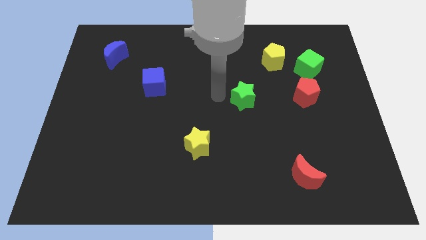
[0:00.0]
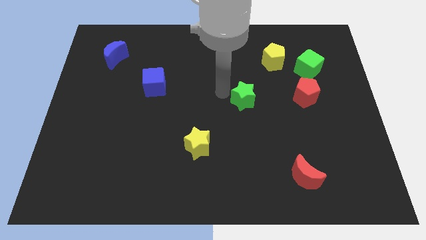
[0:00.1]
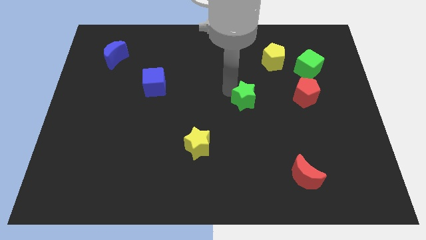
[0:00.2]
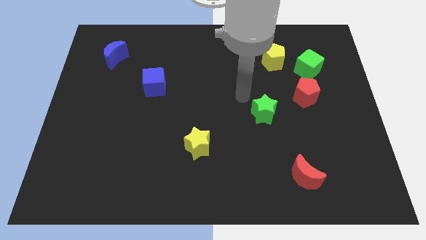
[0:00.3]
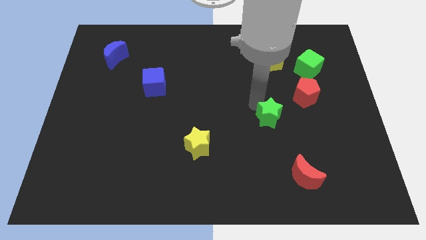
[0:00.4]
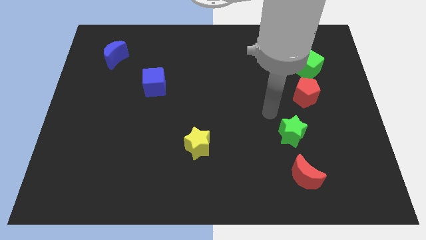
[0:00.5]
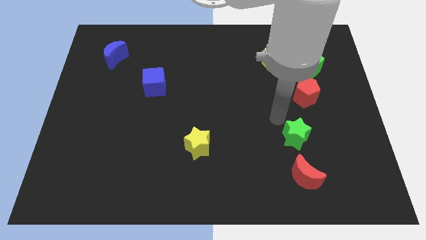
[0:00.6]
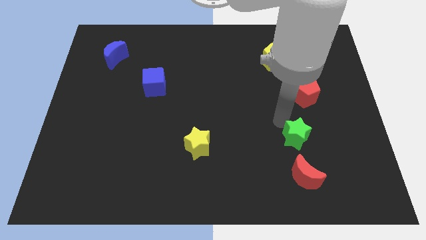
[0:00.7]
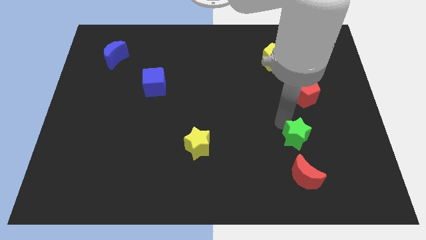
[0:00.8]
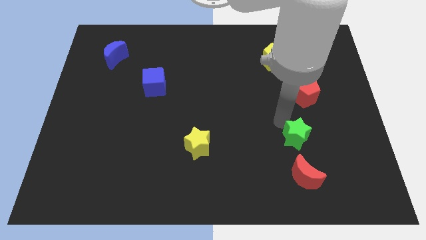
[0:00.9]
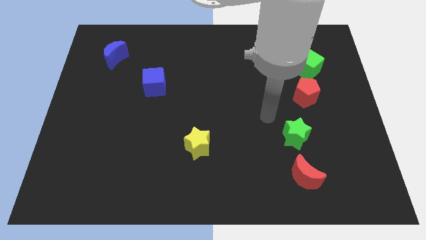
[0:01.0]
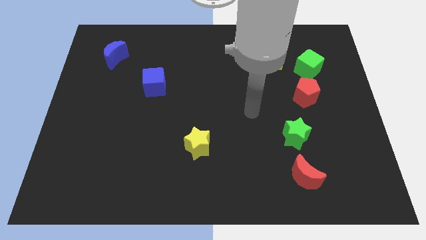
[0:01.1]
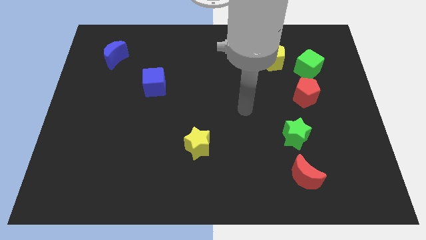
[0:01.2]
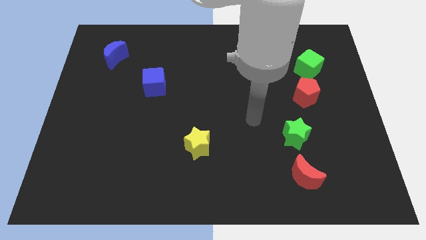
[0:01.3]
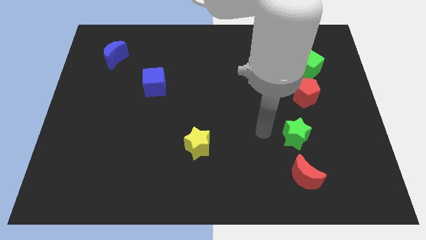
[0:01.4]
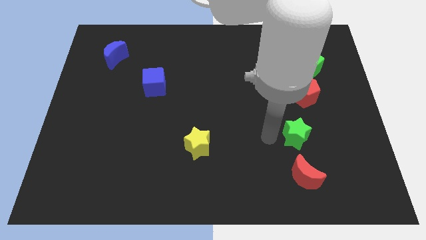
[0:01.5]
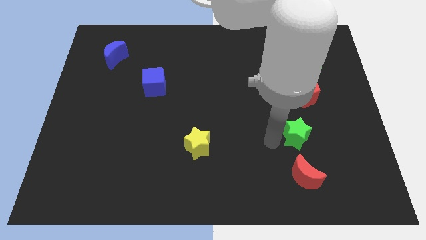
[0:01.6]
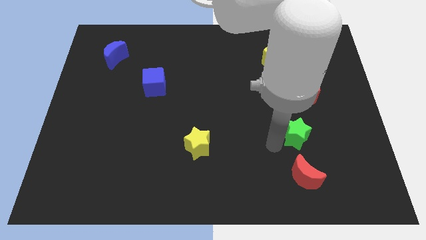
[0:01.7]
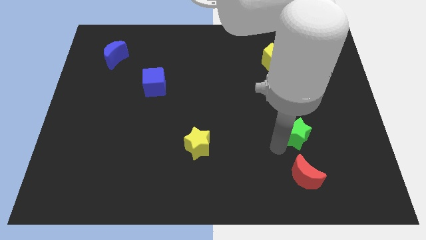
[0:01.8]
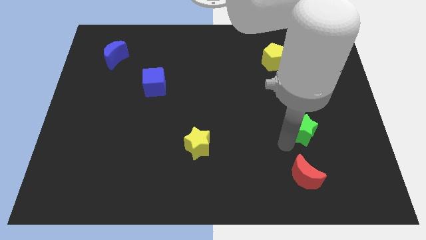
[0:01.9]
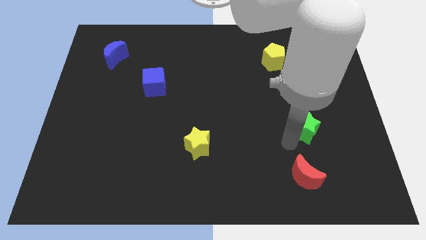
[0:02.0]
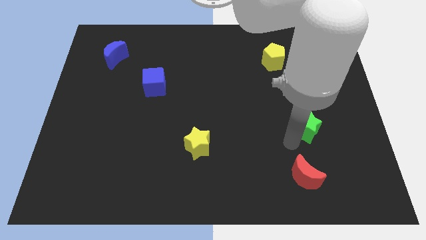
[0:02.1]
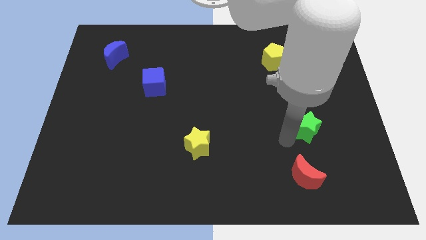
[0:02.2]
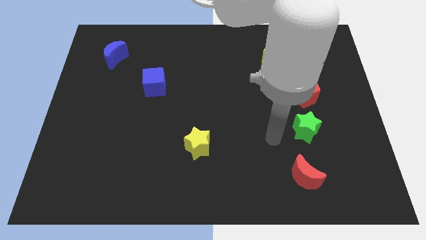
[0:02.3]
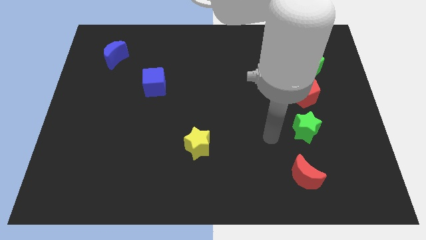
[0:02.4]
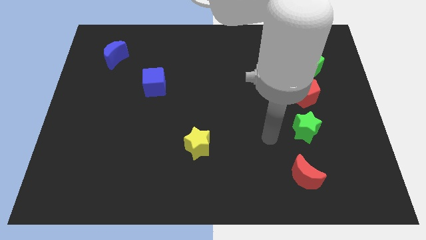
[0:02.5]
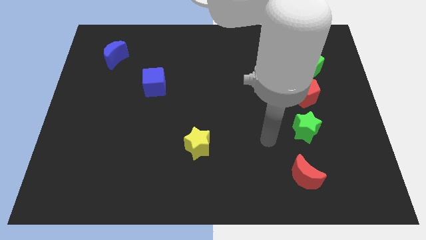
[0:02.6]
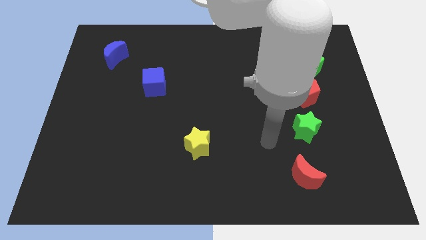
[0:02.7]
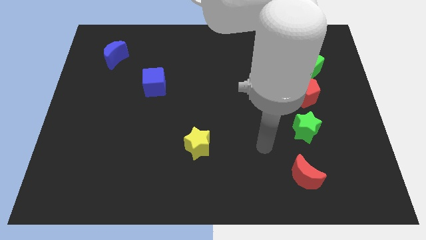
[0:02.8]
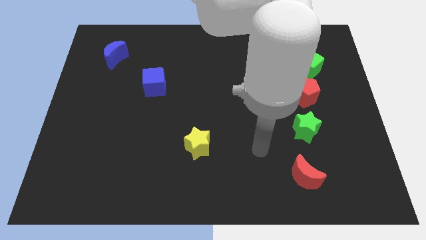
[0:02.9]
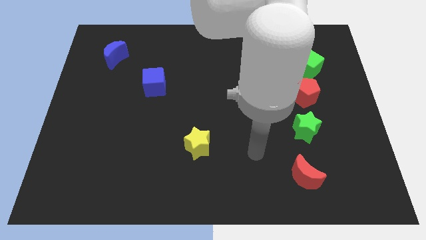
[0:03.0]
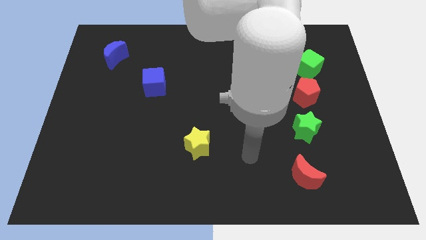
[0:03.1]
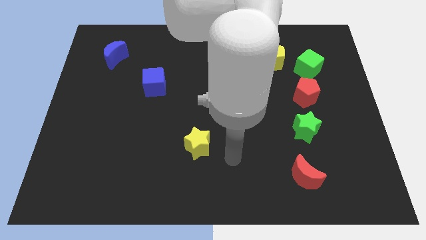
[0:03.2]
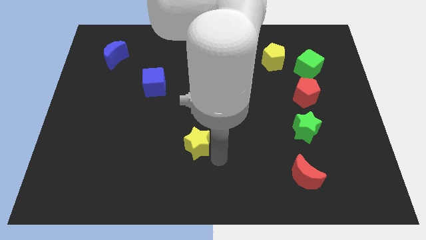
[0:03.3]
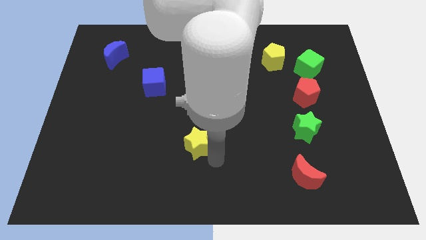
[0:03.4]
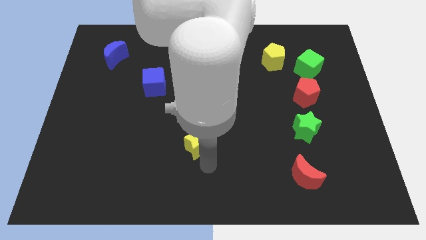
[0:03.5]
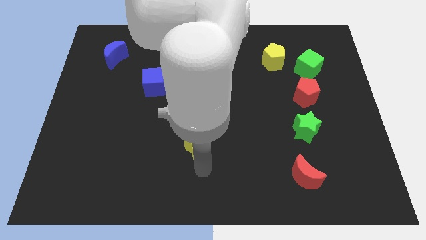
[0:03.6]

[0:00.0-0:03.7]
move green star below the red pentagon

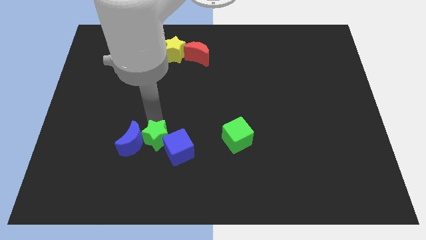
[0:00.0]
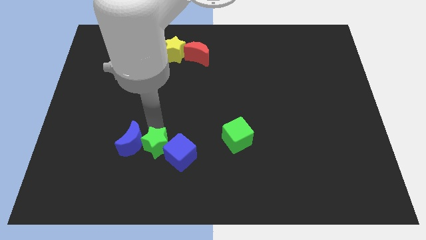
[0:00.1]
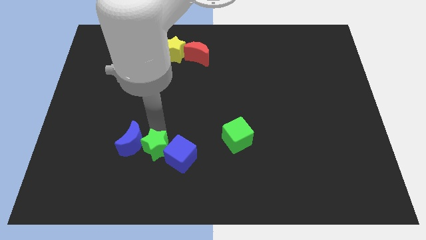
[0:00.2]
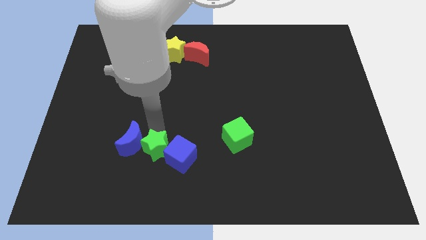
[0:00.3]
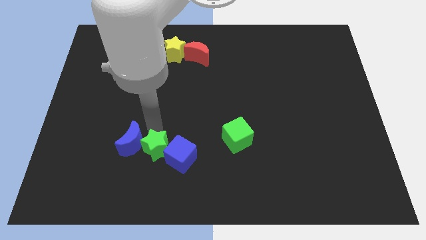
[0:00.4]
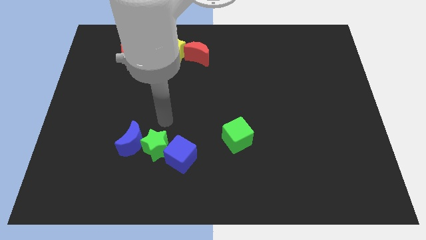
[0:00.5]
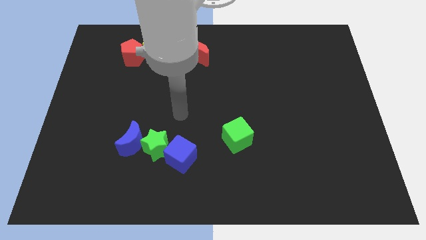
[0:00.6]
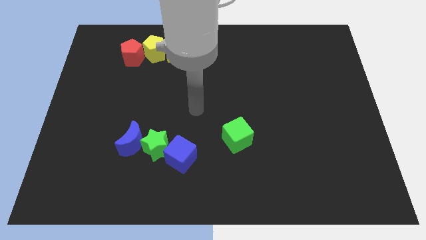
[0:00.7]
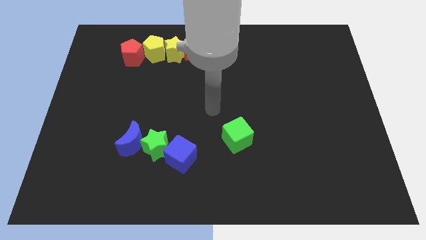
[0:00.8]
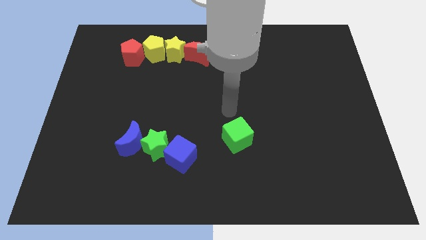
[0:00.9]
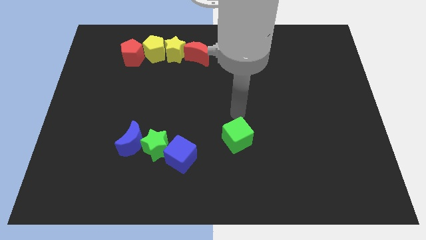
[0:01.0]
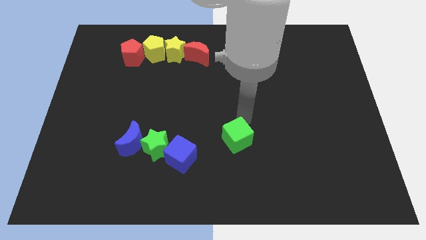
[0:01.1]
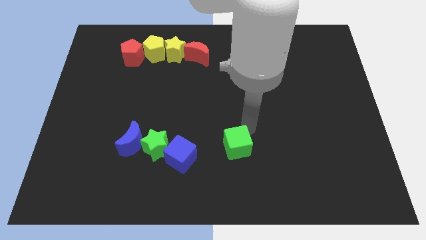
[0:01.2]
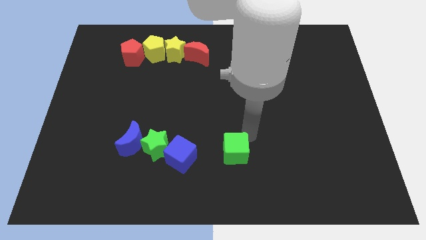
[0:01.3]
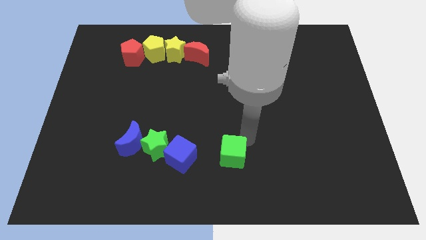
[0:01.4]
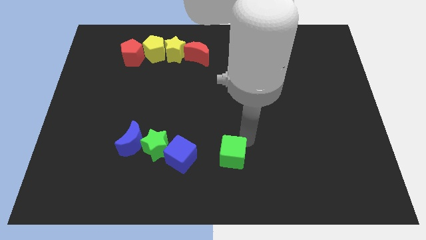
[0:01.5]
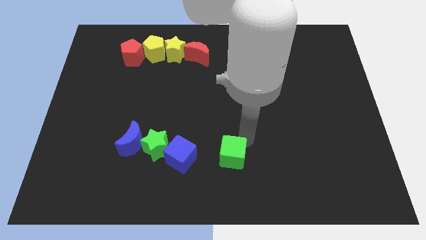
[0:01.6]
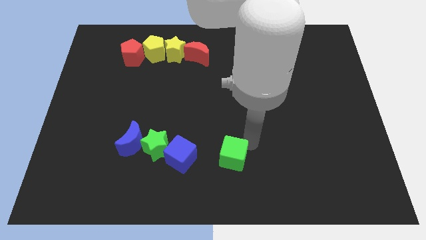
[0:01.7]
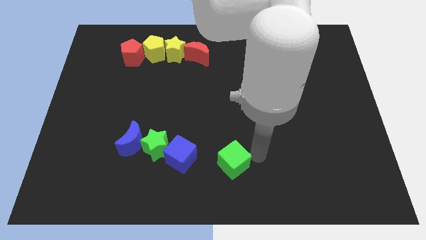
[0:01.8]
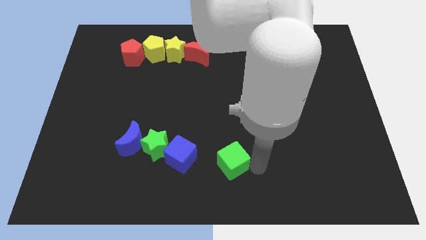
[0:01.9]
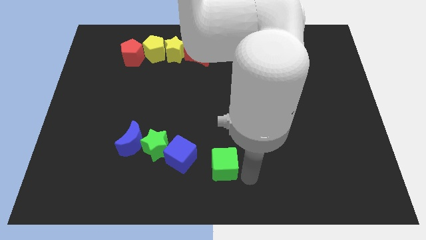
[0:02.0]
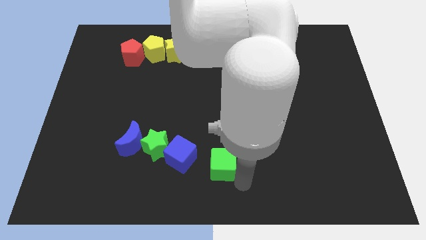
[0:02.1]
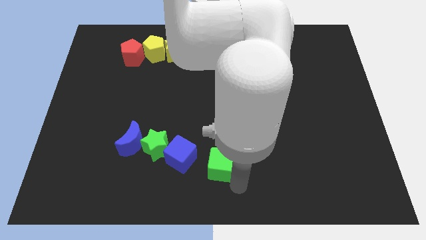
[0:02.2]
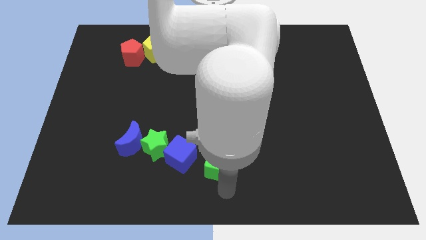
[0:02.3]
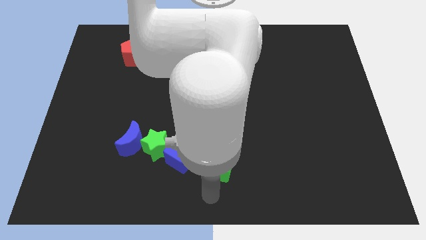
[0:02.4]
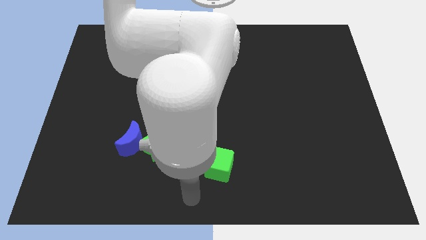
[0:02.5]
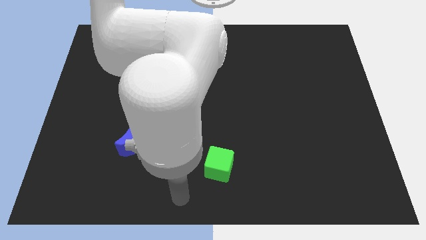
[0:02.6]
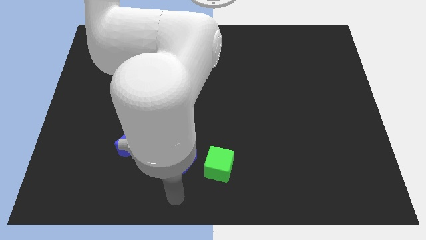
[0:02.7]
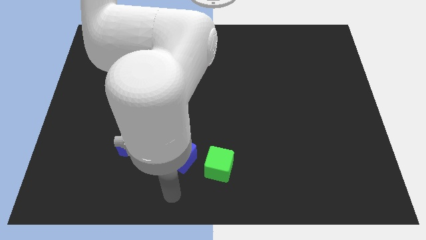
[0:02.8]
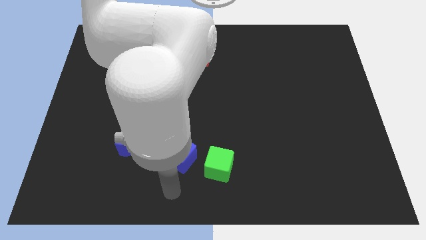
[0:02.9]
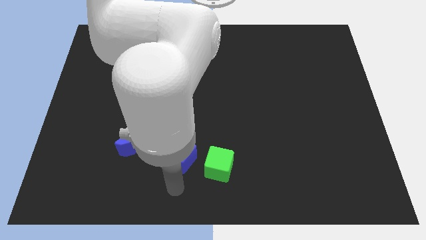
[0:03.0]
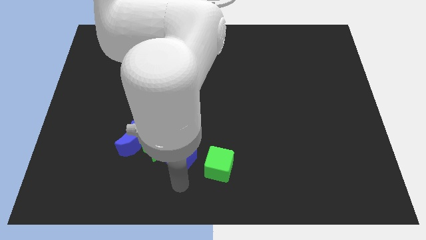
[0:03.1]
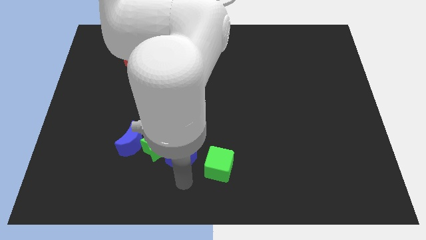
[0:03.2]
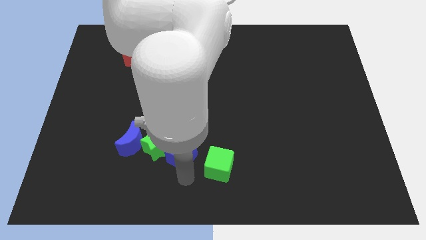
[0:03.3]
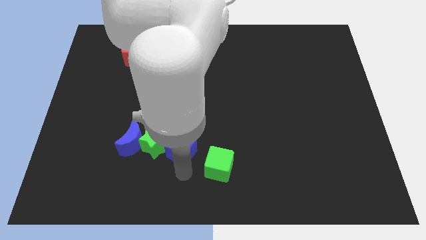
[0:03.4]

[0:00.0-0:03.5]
place the green cube to the right of blue cube

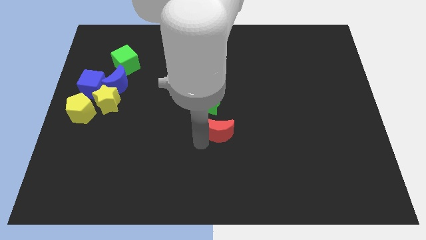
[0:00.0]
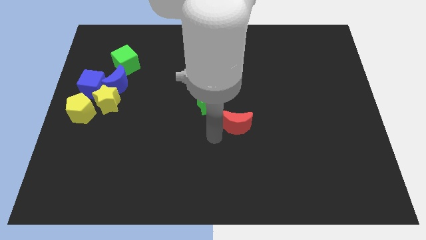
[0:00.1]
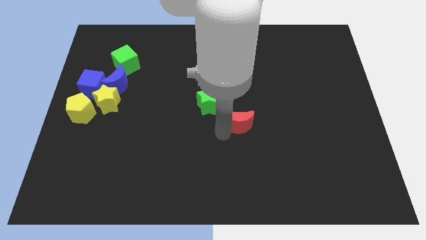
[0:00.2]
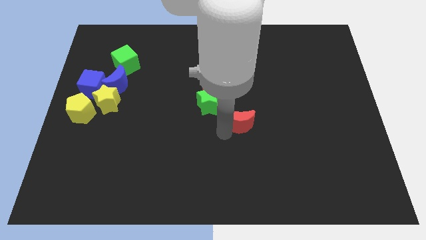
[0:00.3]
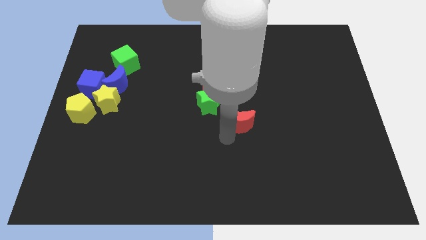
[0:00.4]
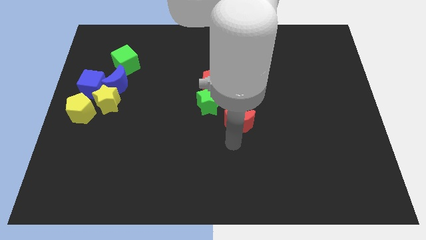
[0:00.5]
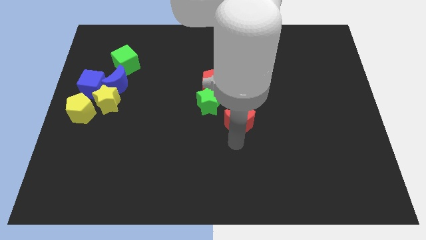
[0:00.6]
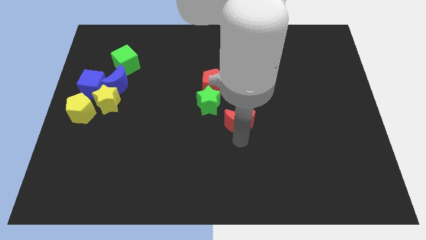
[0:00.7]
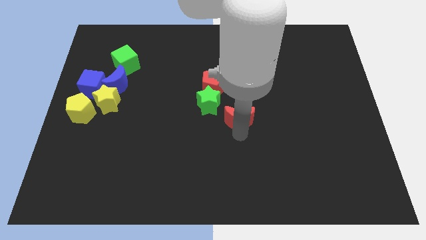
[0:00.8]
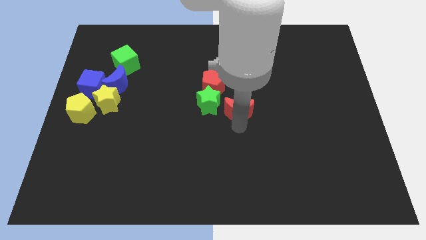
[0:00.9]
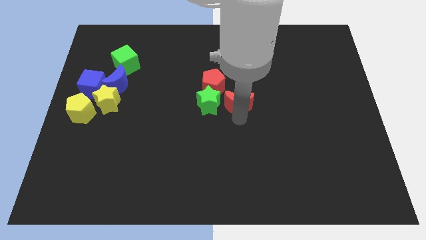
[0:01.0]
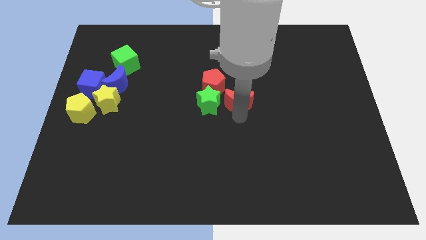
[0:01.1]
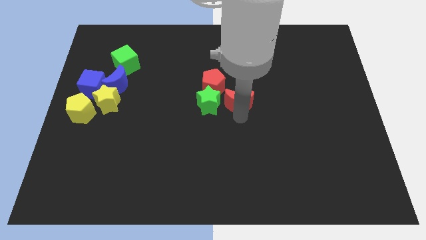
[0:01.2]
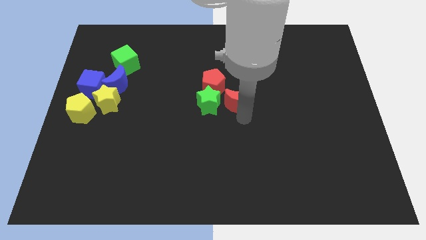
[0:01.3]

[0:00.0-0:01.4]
push the red moon to the right side of the green star

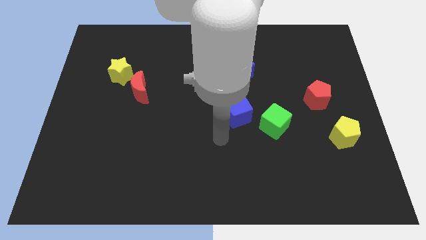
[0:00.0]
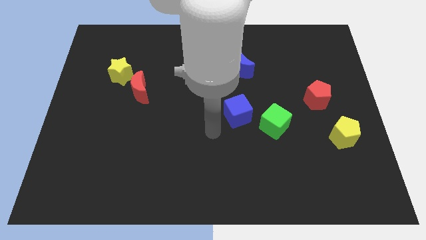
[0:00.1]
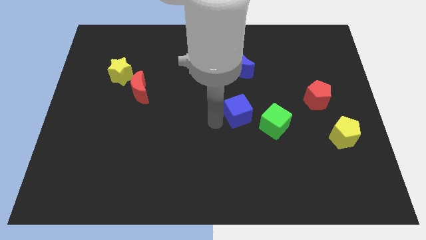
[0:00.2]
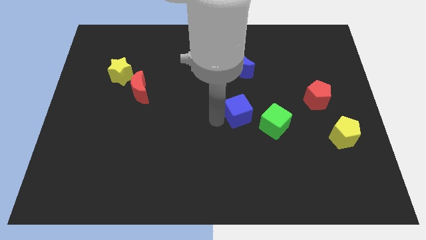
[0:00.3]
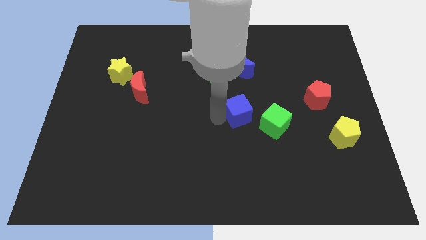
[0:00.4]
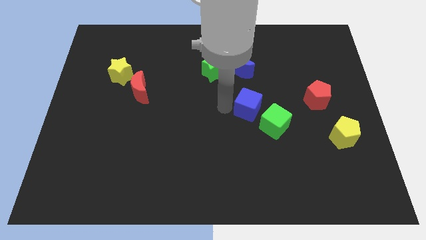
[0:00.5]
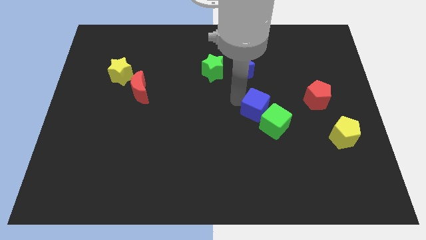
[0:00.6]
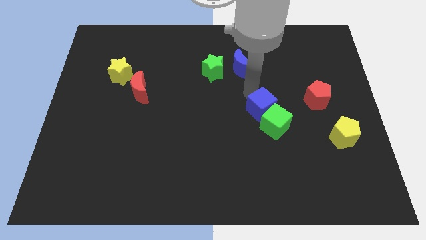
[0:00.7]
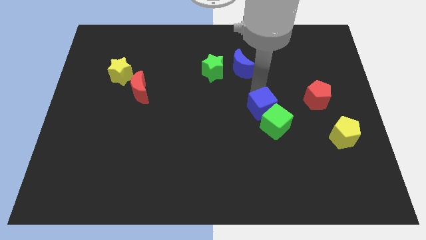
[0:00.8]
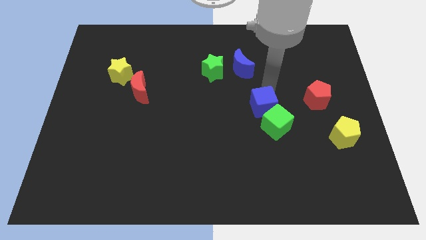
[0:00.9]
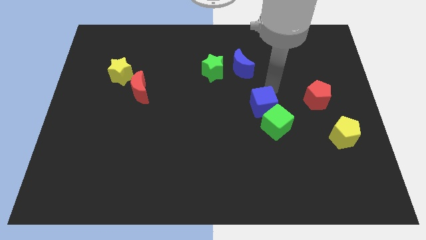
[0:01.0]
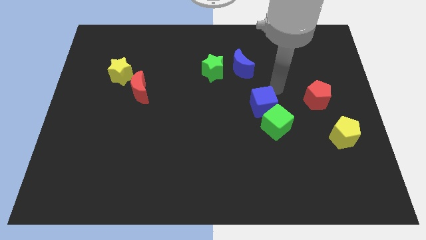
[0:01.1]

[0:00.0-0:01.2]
drag the blue cube to the right
